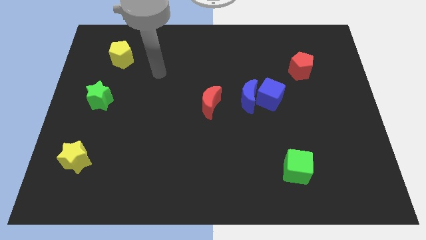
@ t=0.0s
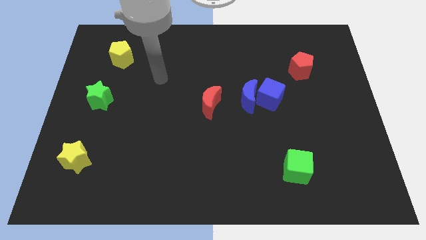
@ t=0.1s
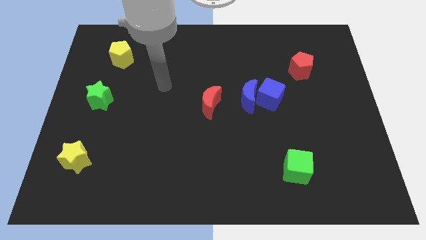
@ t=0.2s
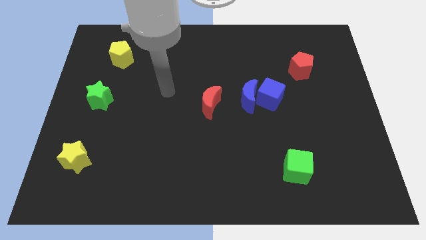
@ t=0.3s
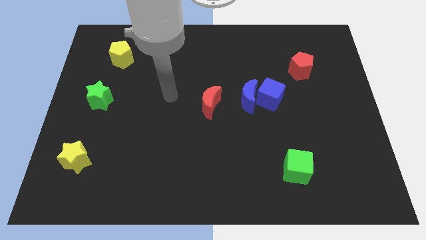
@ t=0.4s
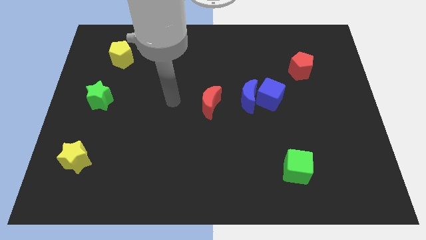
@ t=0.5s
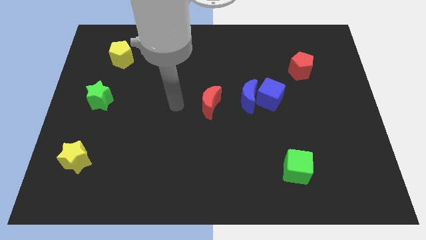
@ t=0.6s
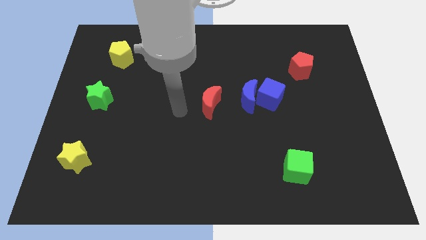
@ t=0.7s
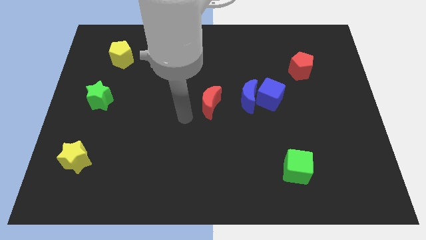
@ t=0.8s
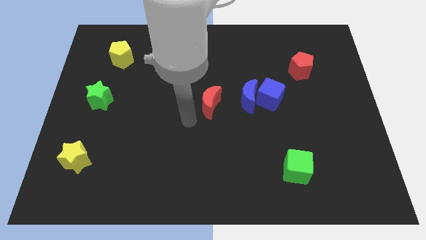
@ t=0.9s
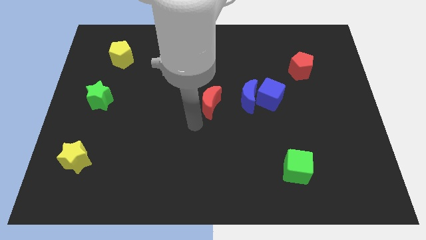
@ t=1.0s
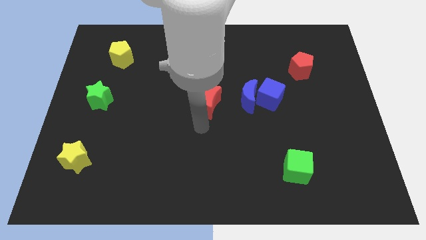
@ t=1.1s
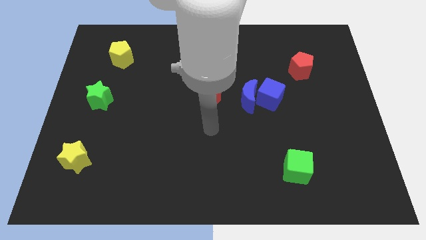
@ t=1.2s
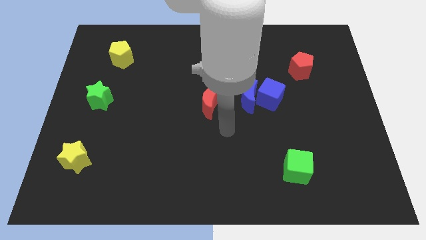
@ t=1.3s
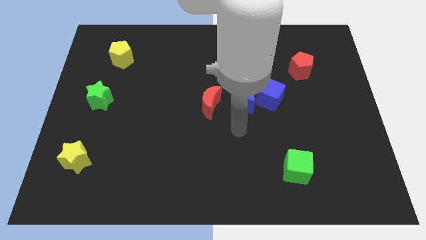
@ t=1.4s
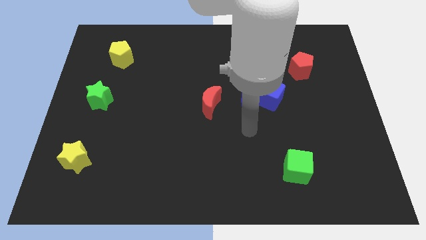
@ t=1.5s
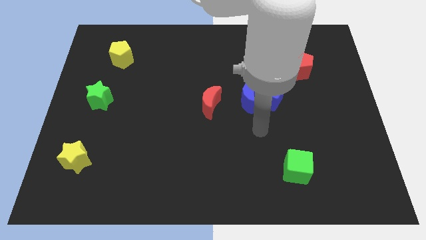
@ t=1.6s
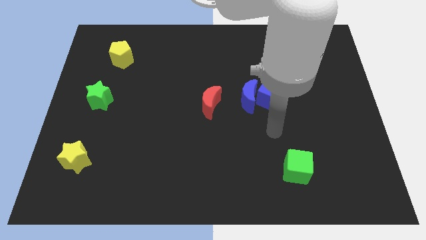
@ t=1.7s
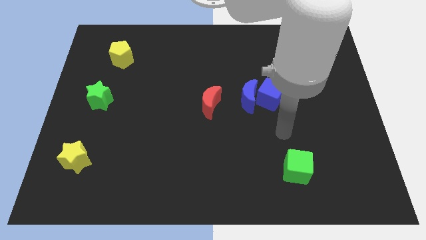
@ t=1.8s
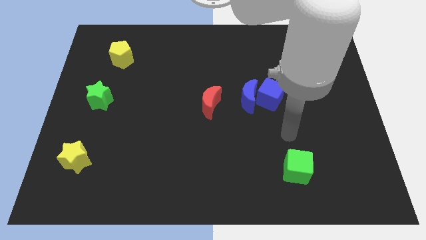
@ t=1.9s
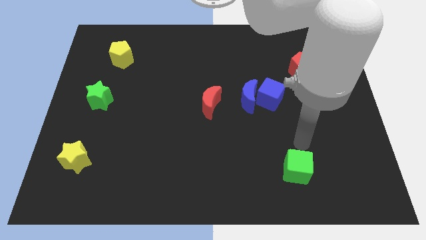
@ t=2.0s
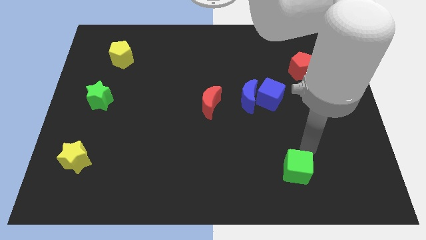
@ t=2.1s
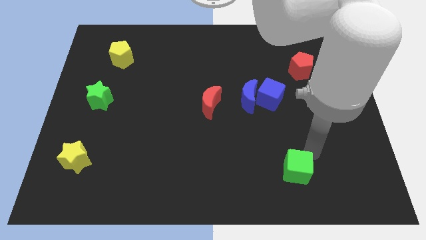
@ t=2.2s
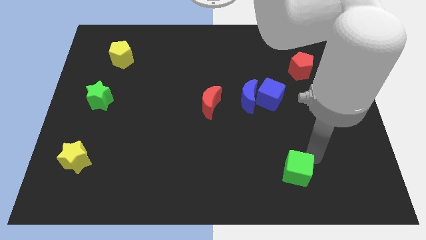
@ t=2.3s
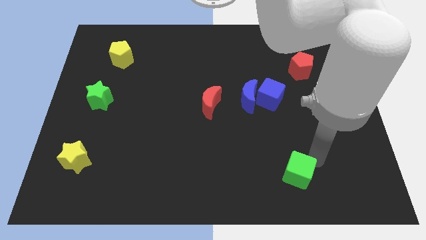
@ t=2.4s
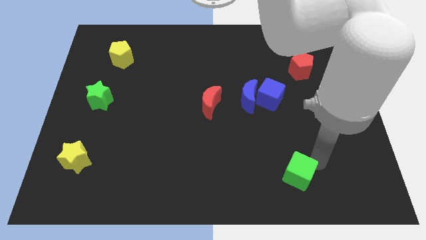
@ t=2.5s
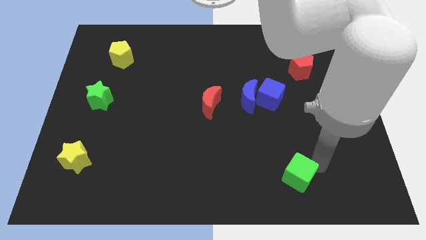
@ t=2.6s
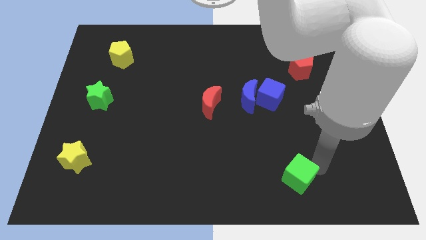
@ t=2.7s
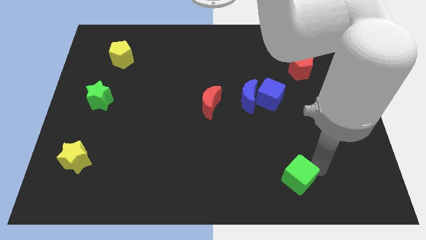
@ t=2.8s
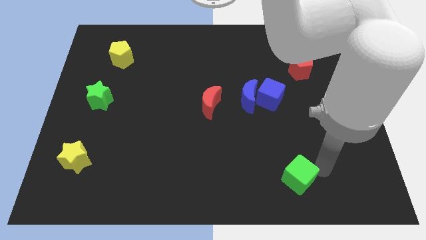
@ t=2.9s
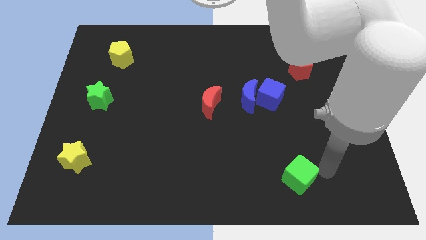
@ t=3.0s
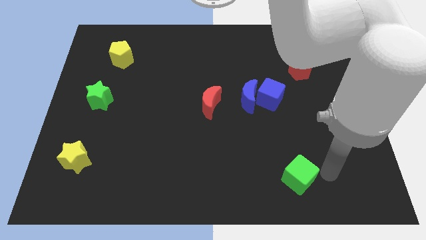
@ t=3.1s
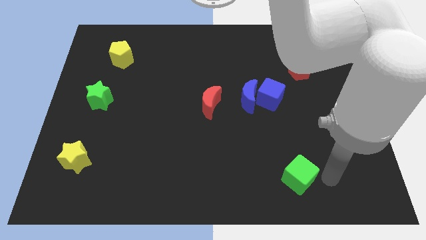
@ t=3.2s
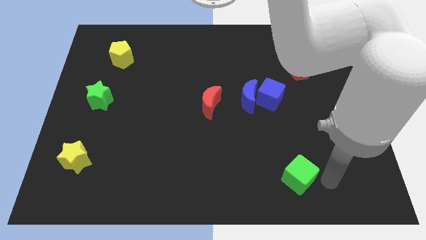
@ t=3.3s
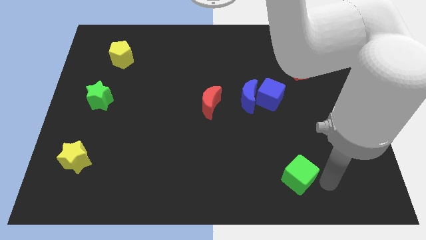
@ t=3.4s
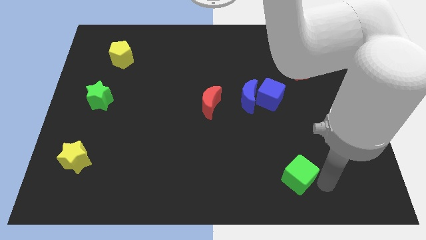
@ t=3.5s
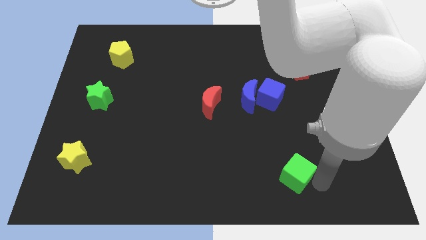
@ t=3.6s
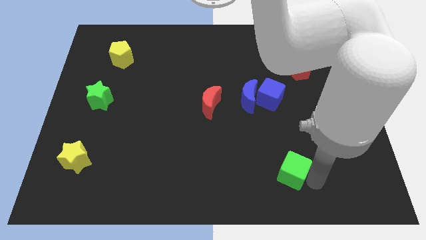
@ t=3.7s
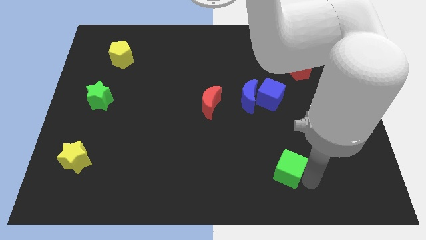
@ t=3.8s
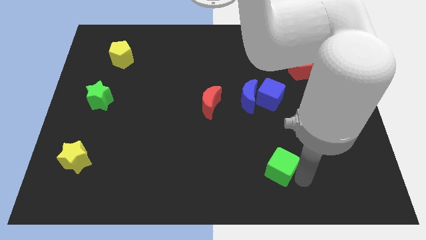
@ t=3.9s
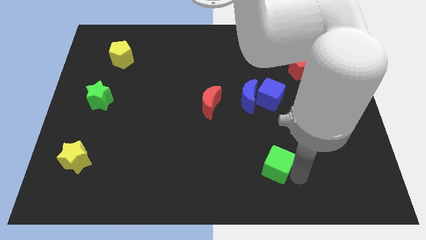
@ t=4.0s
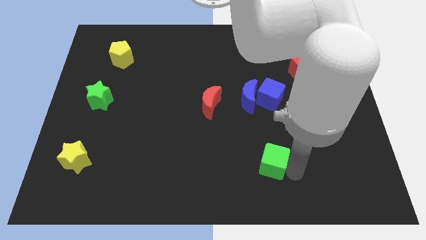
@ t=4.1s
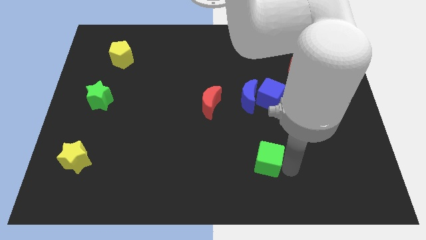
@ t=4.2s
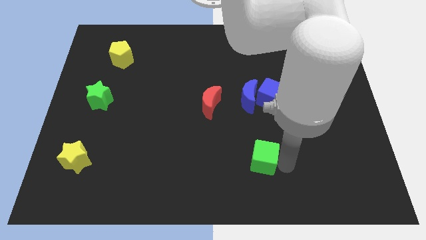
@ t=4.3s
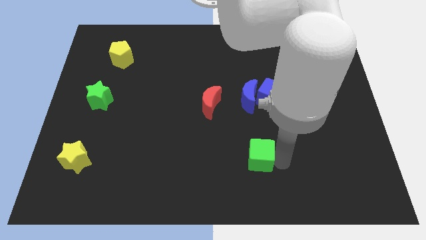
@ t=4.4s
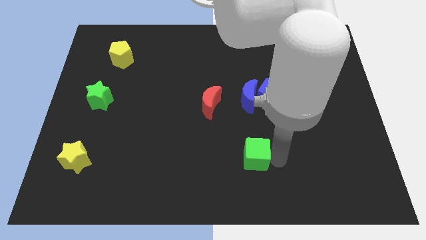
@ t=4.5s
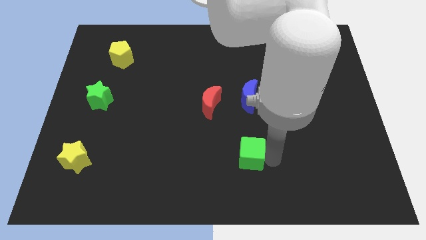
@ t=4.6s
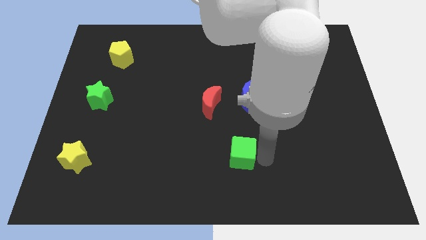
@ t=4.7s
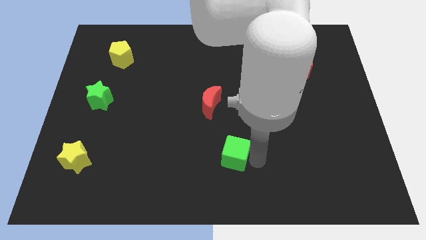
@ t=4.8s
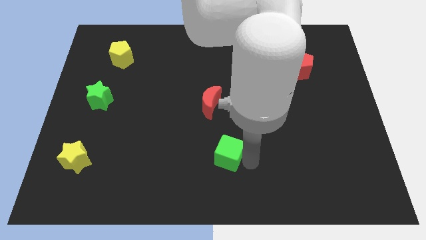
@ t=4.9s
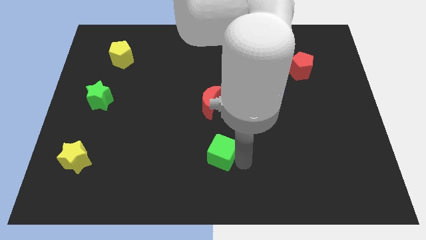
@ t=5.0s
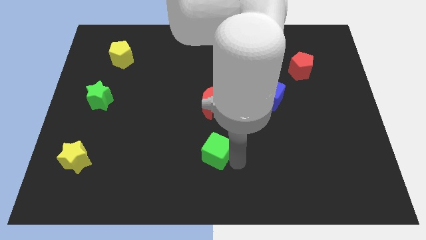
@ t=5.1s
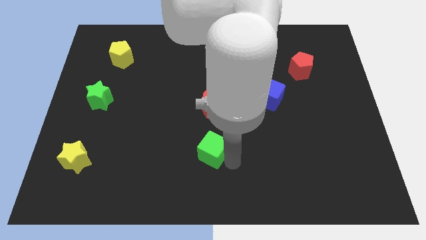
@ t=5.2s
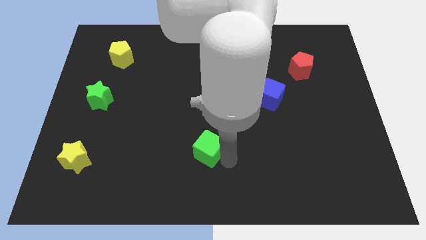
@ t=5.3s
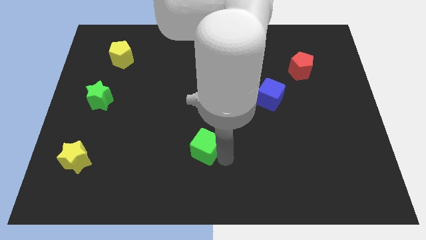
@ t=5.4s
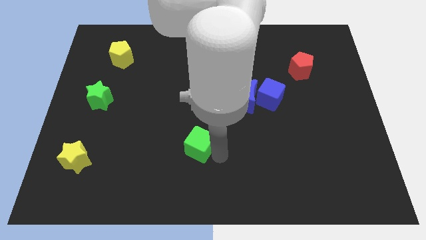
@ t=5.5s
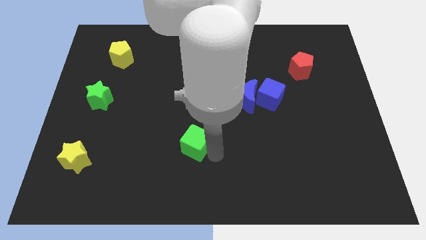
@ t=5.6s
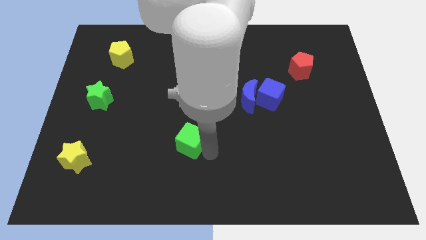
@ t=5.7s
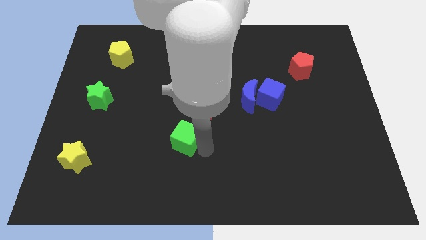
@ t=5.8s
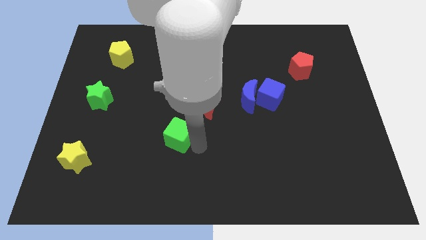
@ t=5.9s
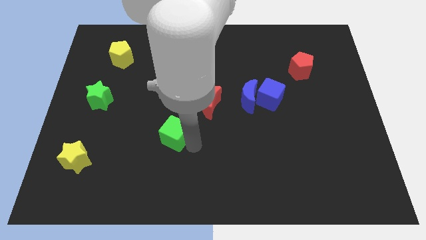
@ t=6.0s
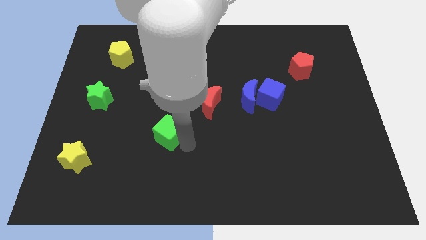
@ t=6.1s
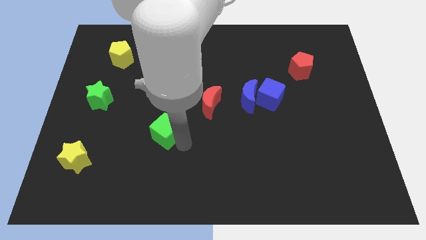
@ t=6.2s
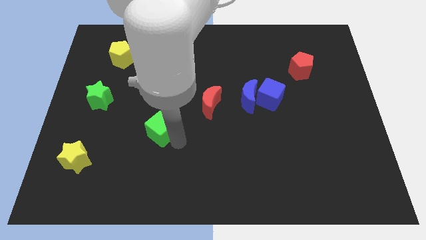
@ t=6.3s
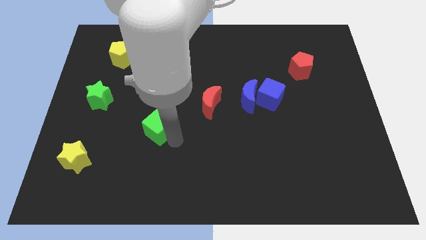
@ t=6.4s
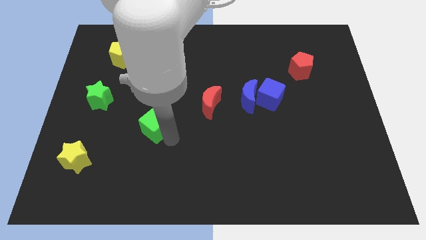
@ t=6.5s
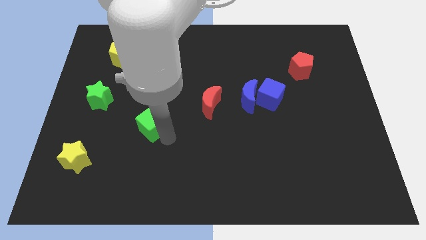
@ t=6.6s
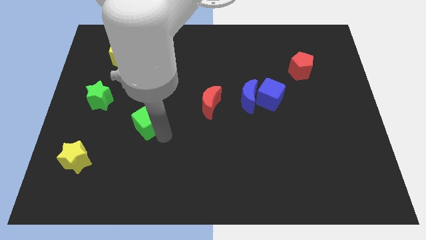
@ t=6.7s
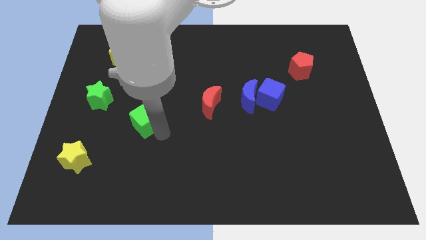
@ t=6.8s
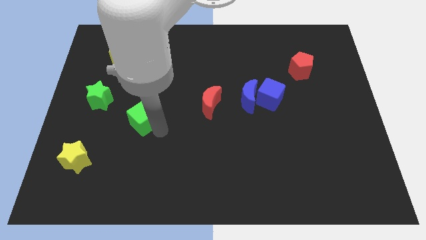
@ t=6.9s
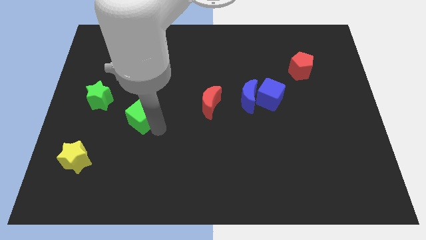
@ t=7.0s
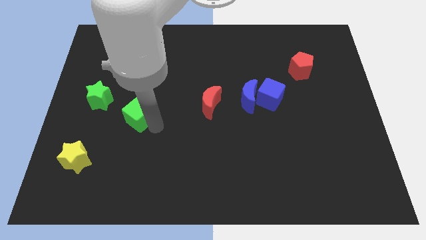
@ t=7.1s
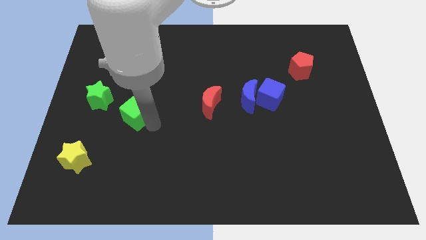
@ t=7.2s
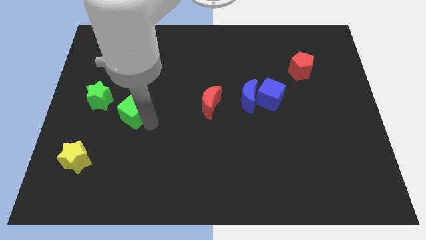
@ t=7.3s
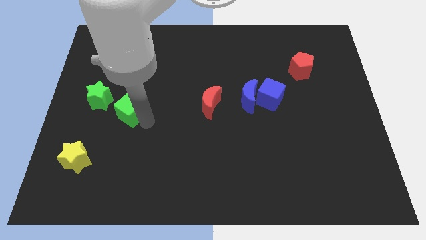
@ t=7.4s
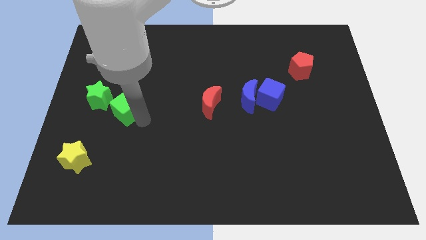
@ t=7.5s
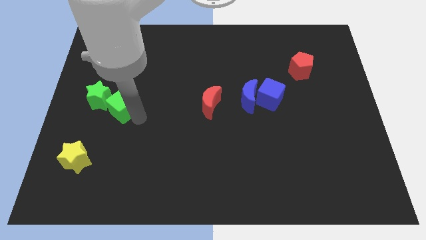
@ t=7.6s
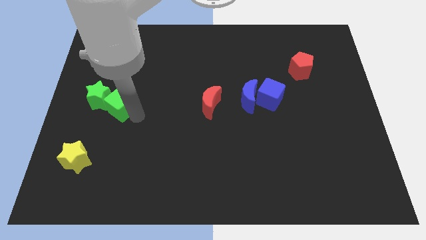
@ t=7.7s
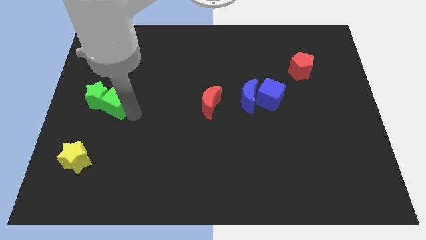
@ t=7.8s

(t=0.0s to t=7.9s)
put the green cube to the green star

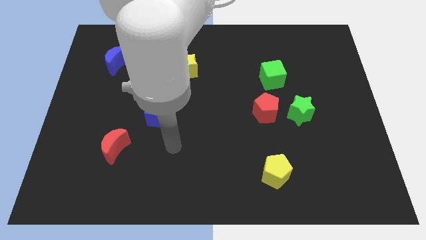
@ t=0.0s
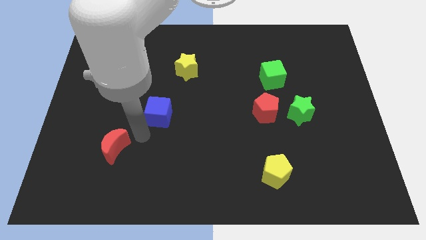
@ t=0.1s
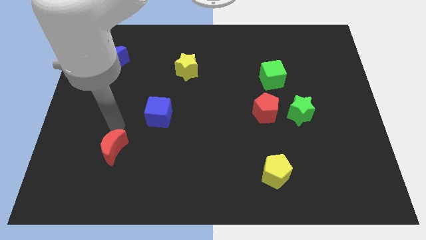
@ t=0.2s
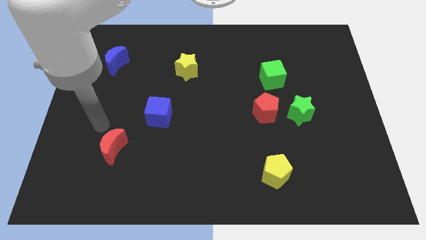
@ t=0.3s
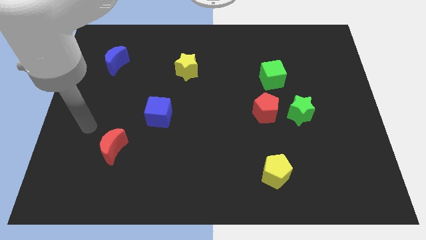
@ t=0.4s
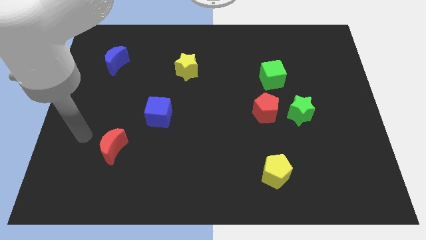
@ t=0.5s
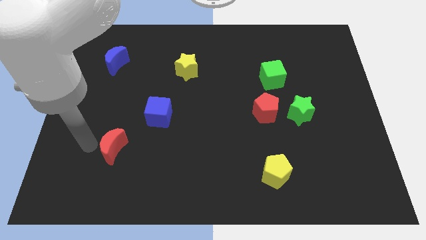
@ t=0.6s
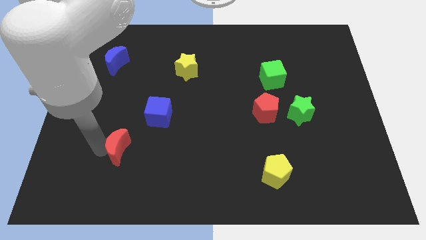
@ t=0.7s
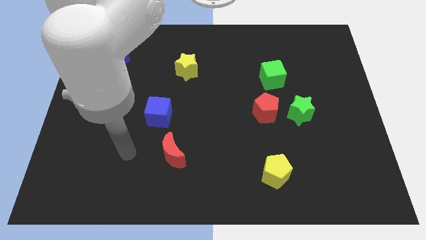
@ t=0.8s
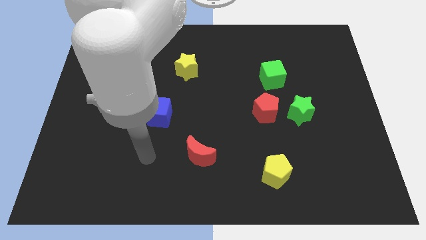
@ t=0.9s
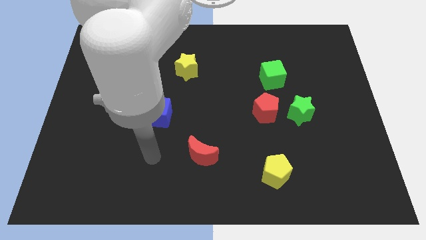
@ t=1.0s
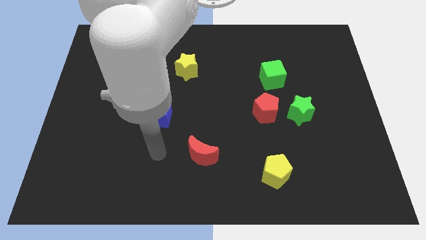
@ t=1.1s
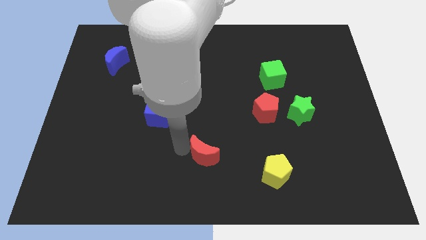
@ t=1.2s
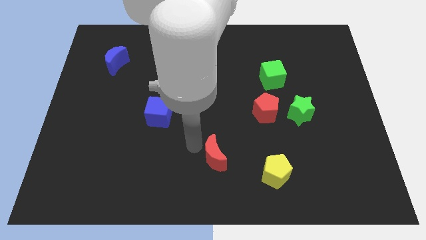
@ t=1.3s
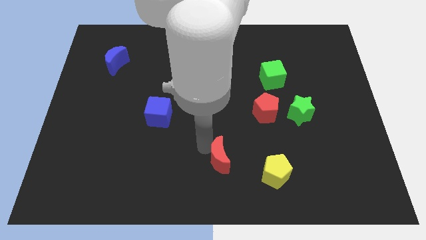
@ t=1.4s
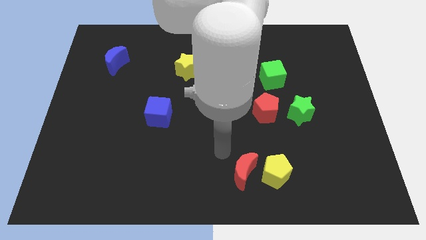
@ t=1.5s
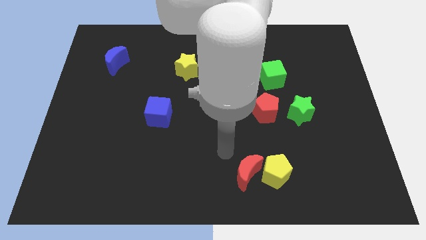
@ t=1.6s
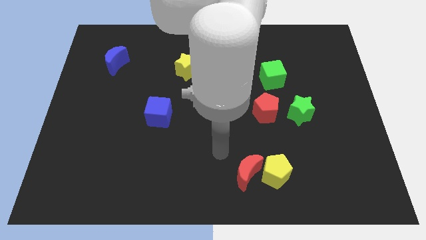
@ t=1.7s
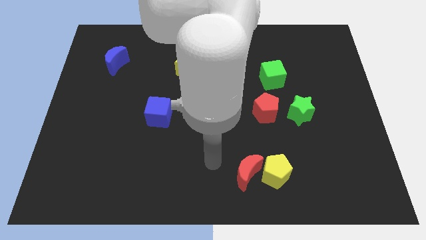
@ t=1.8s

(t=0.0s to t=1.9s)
put the red moon to the yellow pentagon
